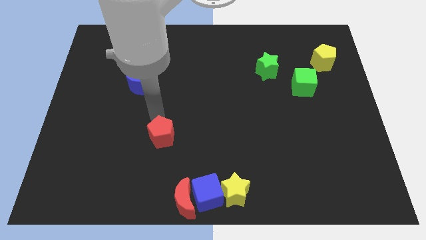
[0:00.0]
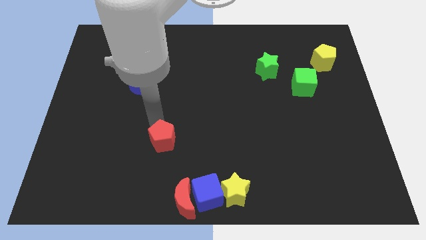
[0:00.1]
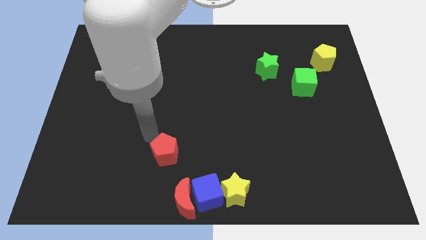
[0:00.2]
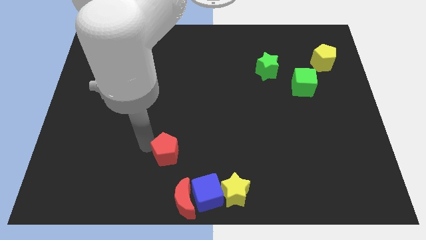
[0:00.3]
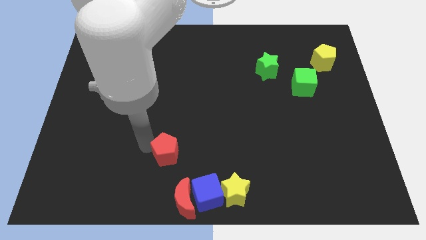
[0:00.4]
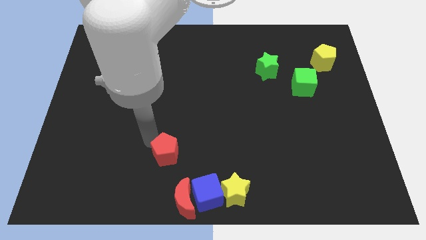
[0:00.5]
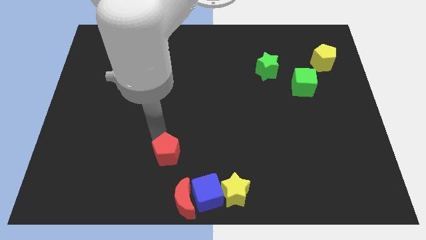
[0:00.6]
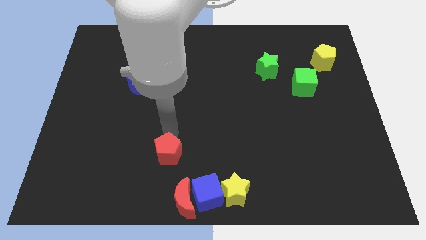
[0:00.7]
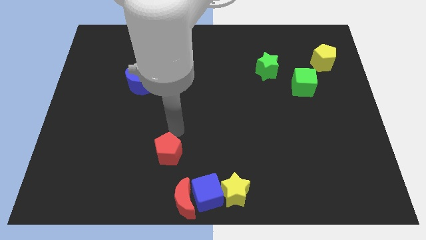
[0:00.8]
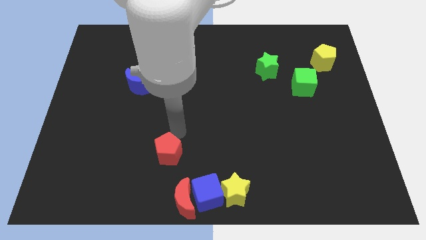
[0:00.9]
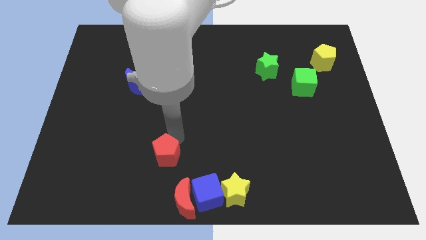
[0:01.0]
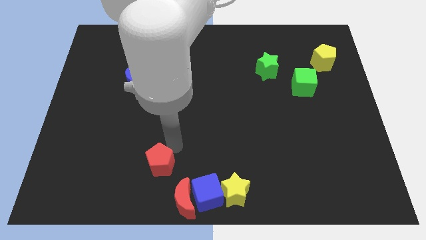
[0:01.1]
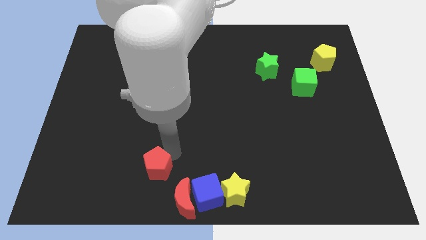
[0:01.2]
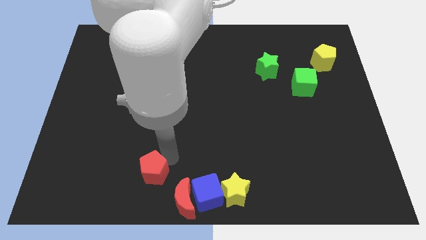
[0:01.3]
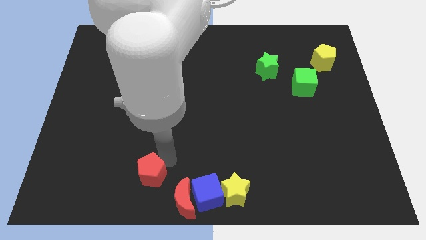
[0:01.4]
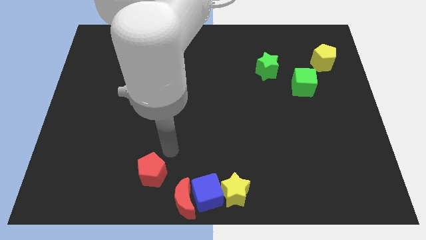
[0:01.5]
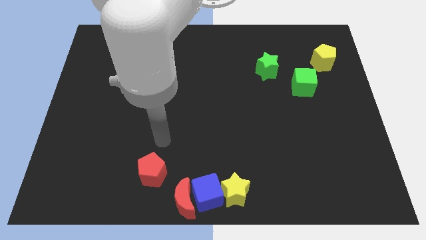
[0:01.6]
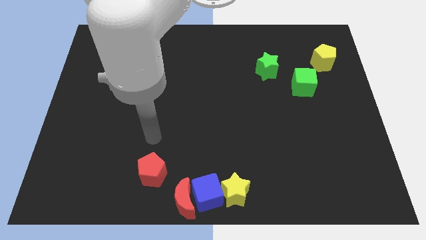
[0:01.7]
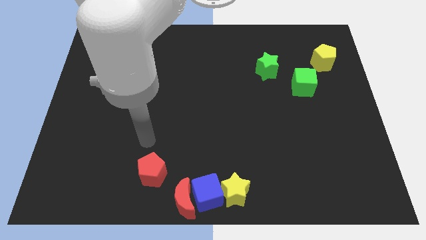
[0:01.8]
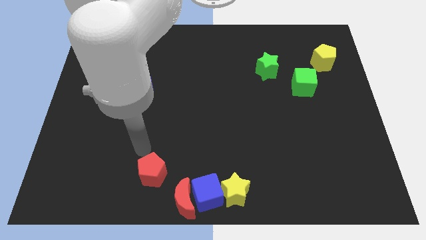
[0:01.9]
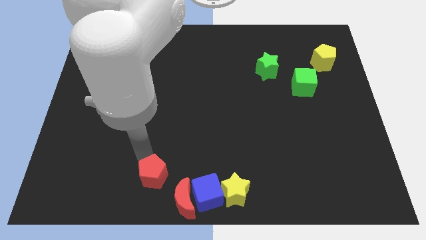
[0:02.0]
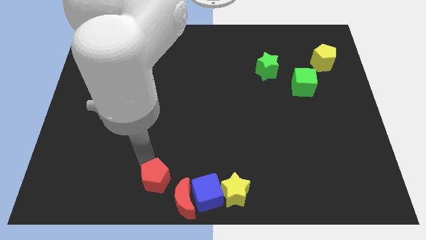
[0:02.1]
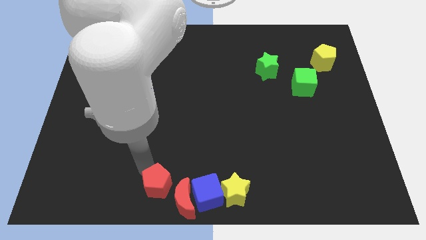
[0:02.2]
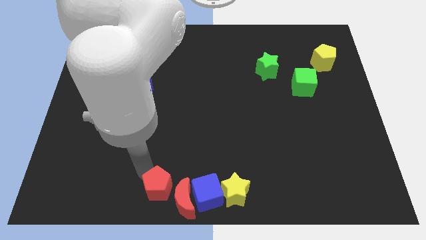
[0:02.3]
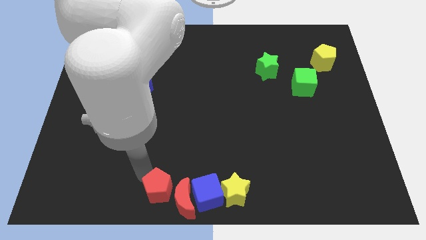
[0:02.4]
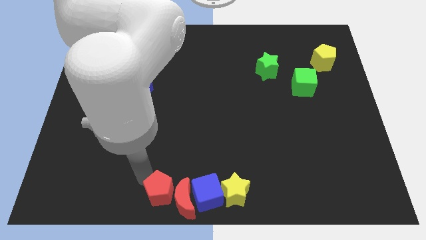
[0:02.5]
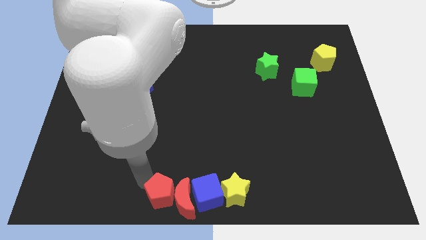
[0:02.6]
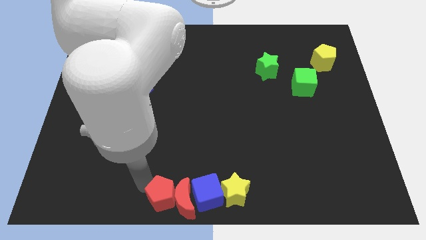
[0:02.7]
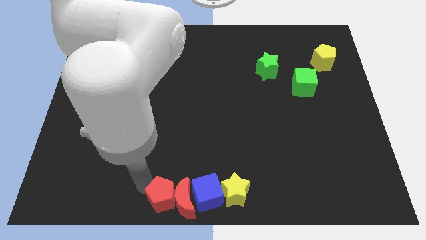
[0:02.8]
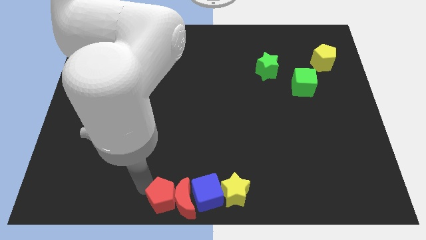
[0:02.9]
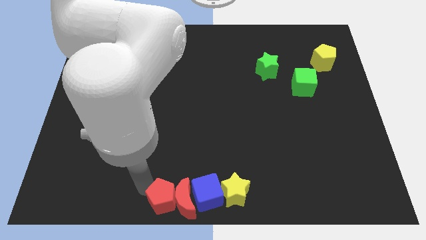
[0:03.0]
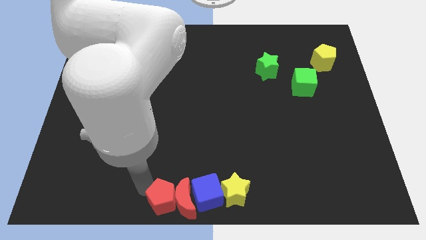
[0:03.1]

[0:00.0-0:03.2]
move the red pentagon parallel left to the red crescent

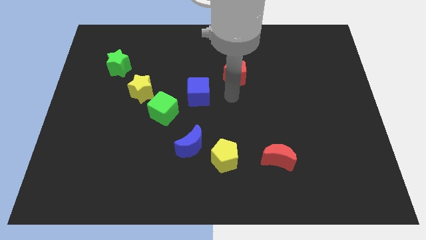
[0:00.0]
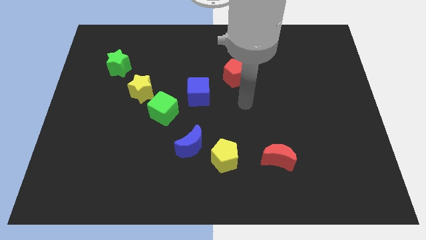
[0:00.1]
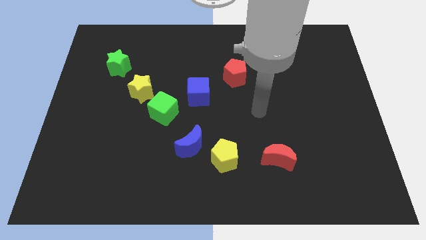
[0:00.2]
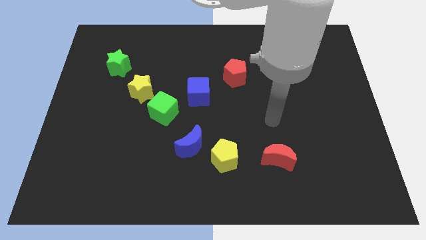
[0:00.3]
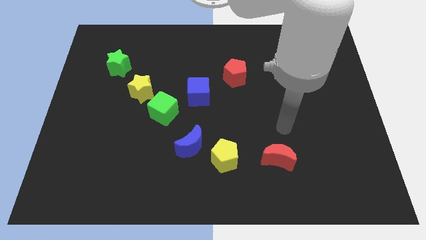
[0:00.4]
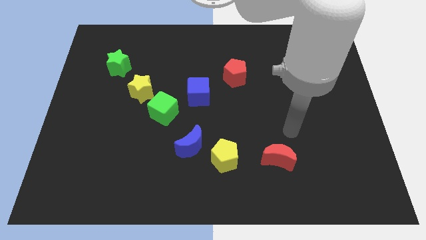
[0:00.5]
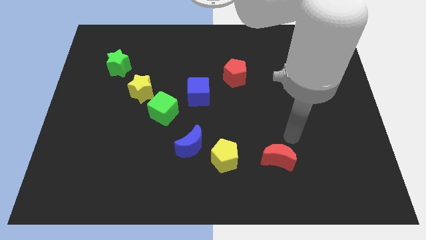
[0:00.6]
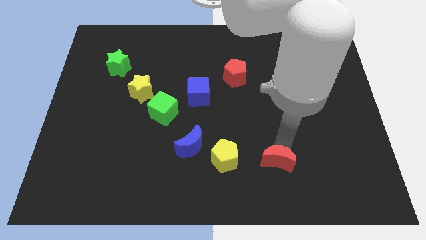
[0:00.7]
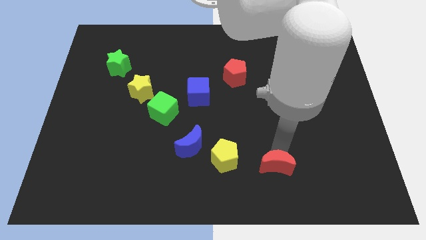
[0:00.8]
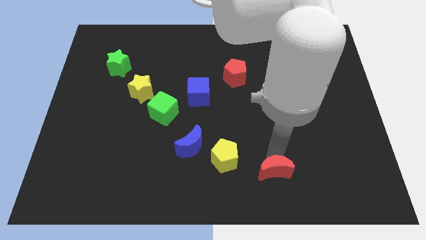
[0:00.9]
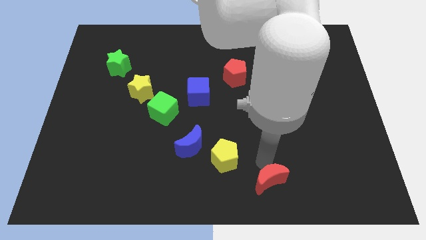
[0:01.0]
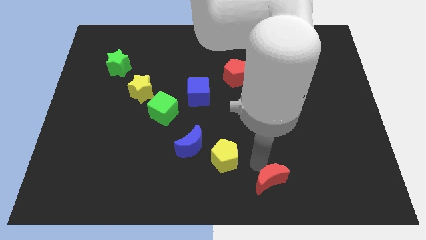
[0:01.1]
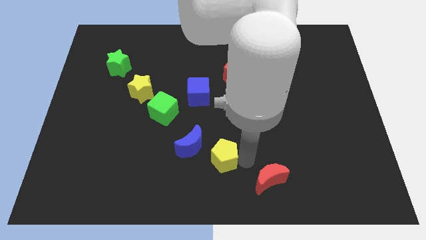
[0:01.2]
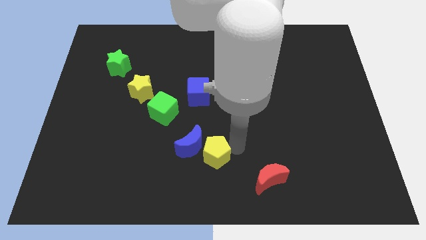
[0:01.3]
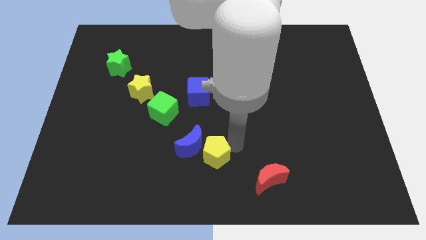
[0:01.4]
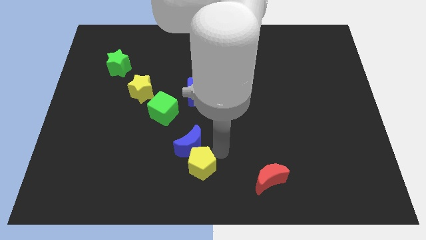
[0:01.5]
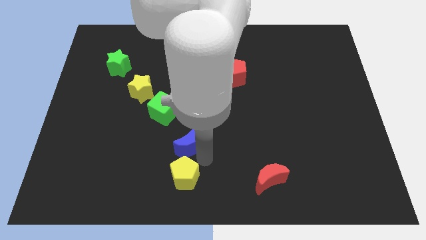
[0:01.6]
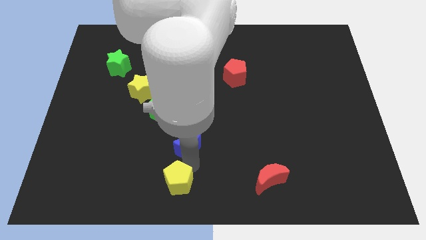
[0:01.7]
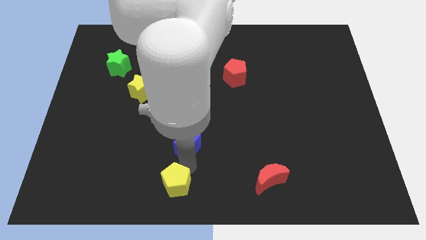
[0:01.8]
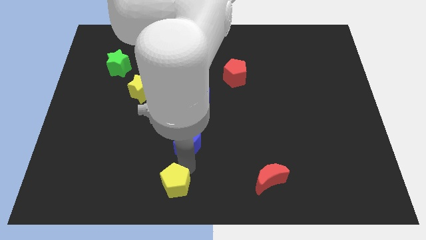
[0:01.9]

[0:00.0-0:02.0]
move the red moon towards the bottom right of the board

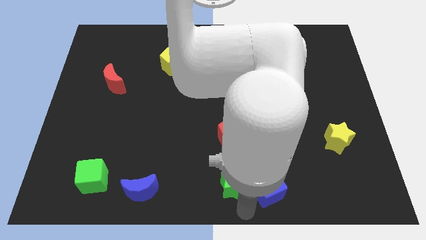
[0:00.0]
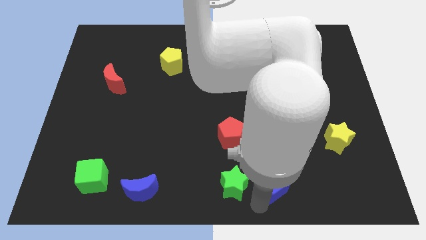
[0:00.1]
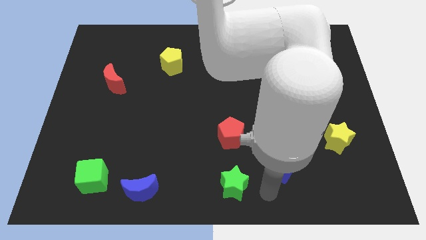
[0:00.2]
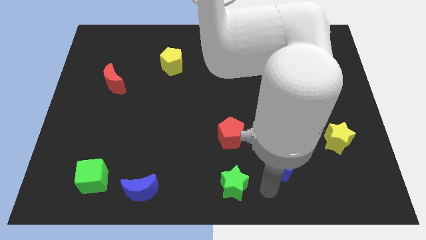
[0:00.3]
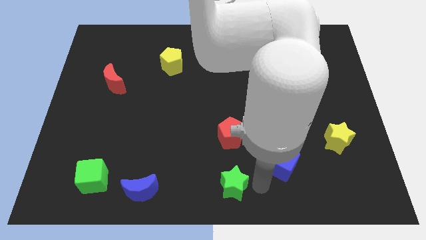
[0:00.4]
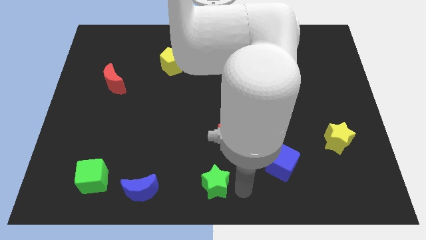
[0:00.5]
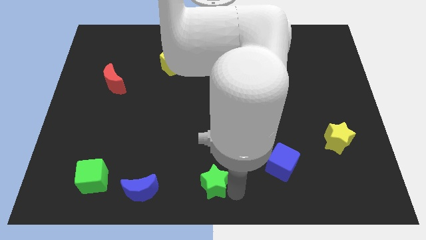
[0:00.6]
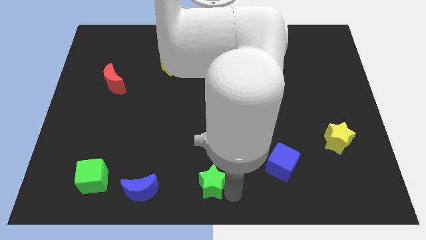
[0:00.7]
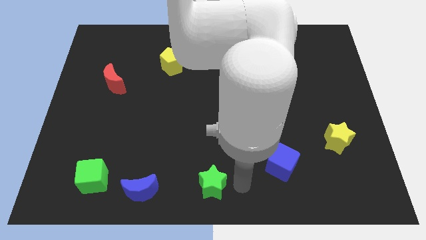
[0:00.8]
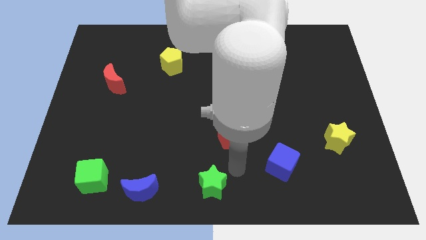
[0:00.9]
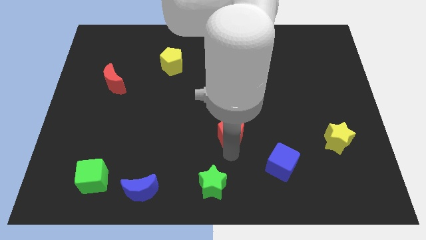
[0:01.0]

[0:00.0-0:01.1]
separate the blue cube and the green star

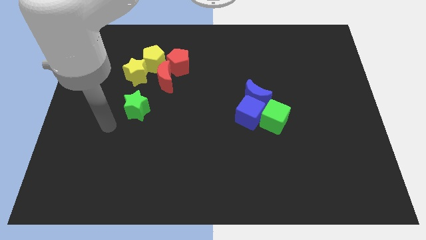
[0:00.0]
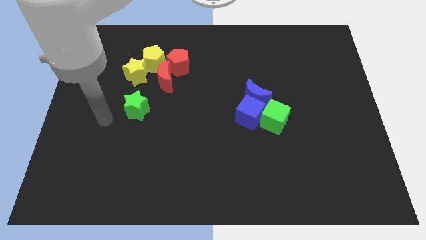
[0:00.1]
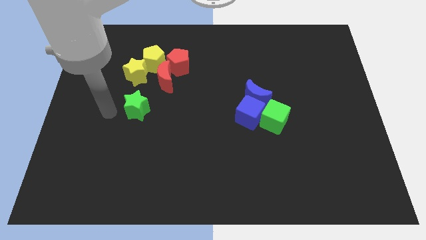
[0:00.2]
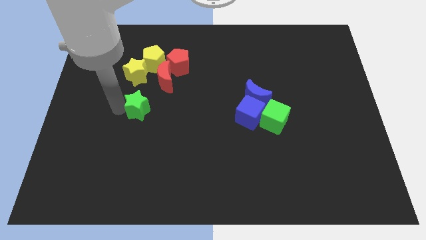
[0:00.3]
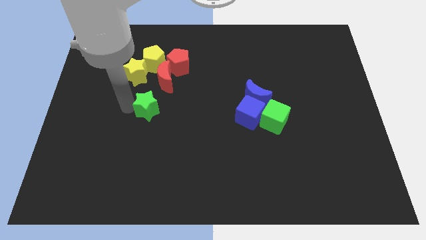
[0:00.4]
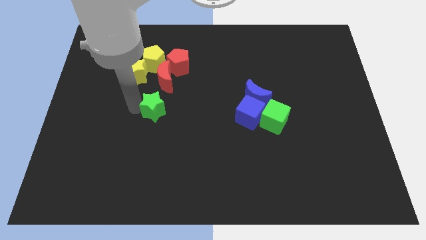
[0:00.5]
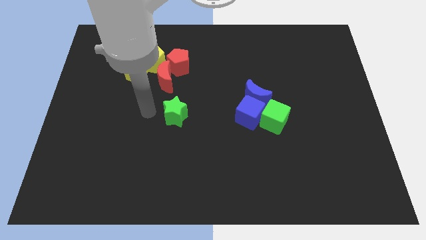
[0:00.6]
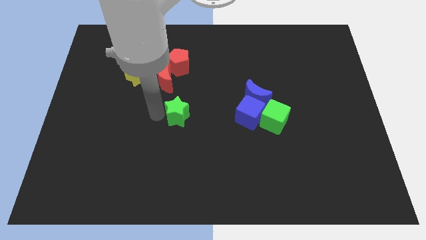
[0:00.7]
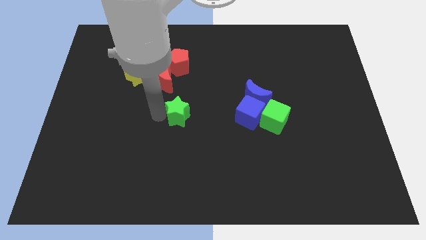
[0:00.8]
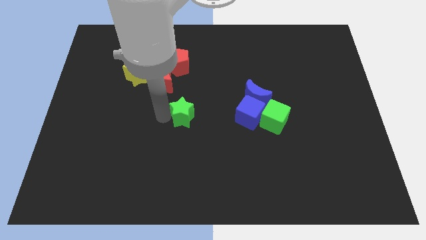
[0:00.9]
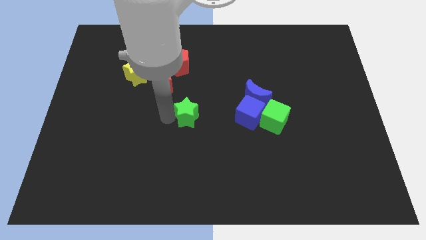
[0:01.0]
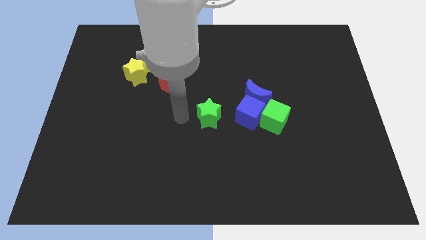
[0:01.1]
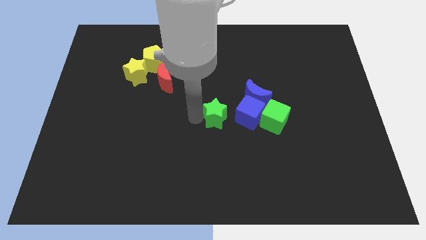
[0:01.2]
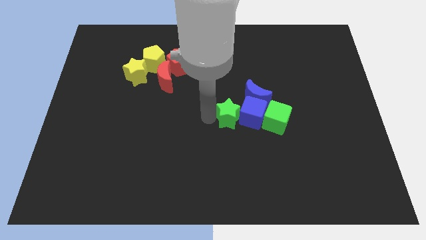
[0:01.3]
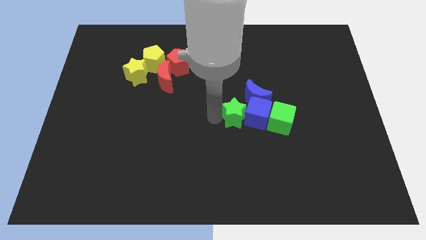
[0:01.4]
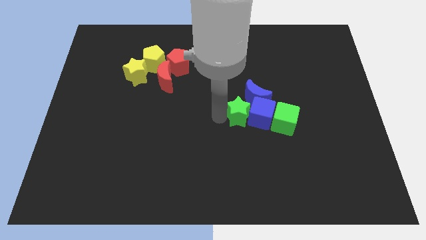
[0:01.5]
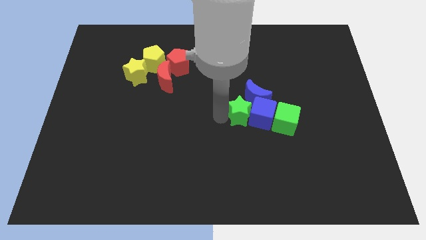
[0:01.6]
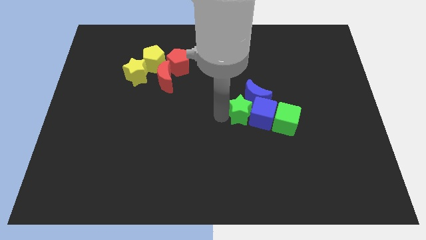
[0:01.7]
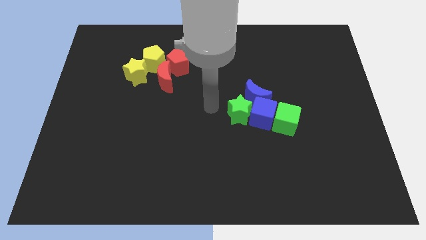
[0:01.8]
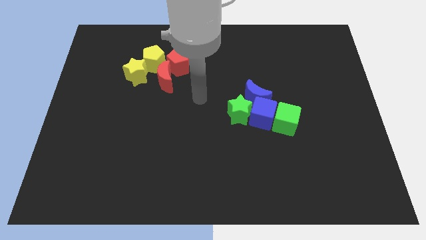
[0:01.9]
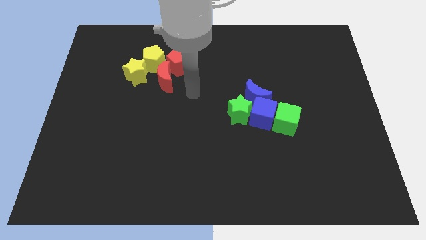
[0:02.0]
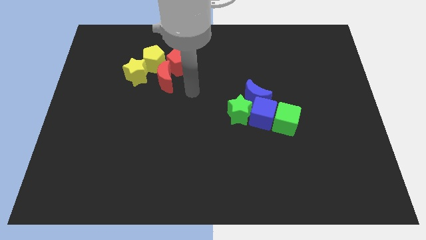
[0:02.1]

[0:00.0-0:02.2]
move the green star into the blue cube

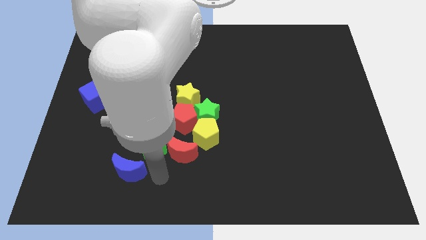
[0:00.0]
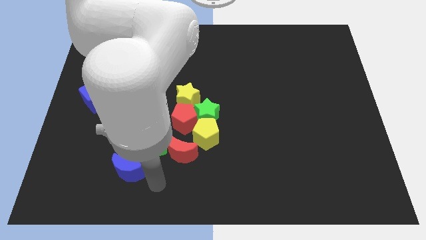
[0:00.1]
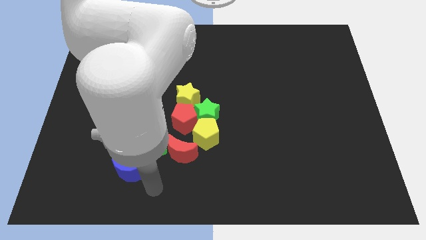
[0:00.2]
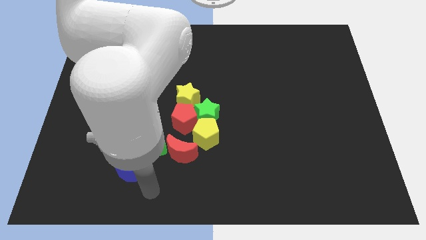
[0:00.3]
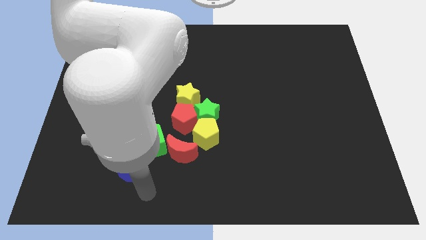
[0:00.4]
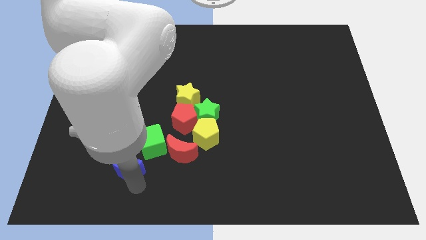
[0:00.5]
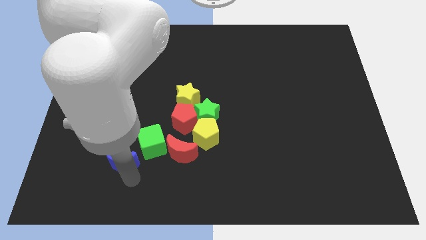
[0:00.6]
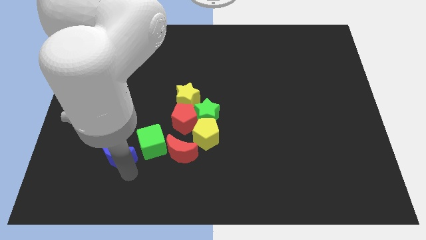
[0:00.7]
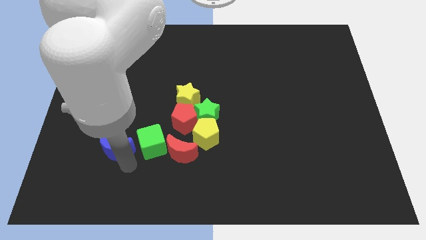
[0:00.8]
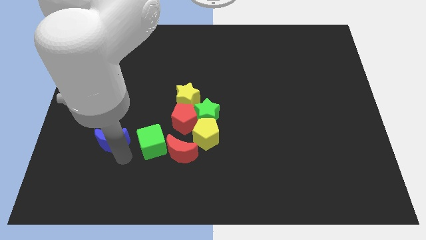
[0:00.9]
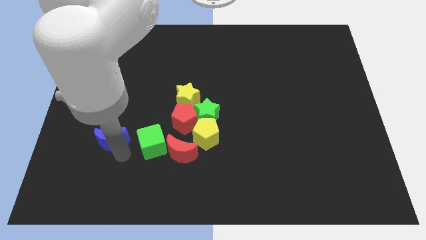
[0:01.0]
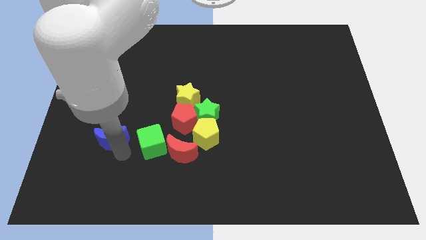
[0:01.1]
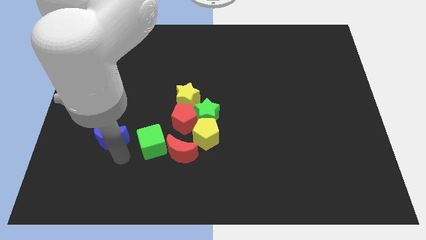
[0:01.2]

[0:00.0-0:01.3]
move the blue crescent to the left of green cube
